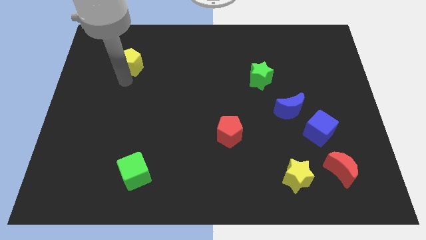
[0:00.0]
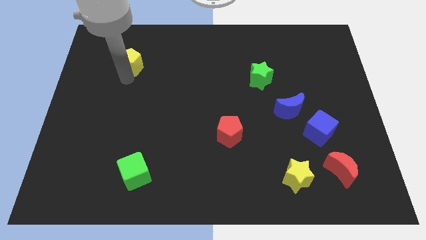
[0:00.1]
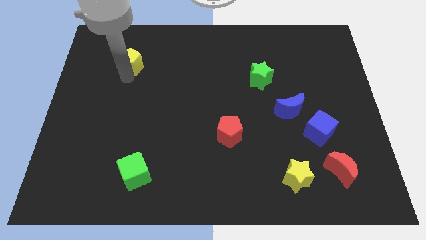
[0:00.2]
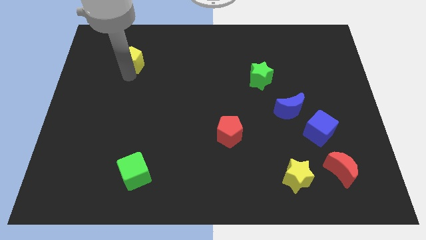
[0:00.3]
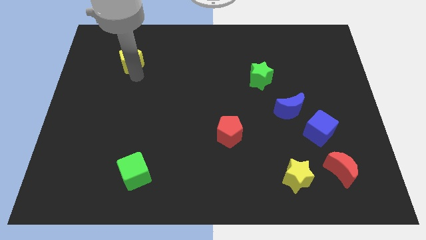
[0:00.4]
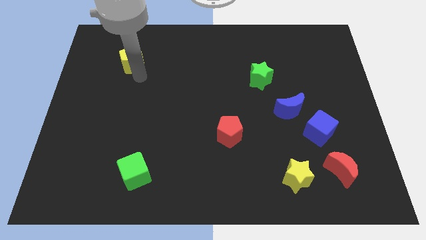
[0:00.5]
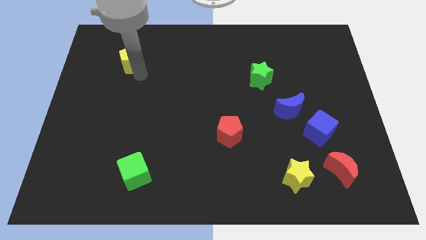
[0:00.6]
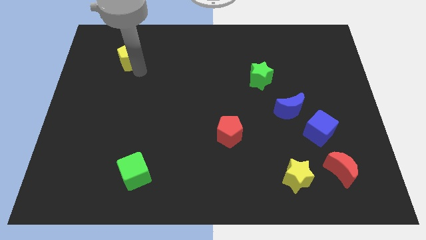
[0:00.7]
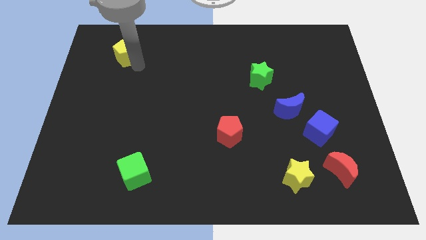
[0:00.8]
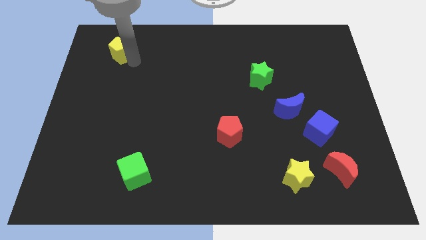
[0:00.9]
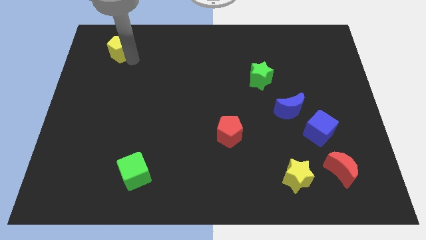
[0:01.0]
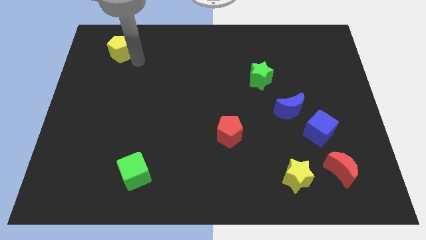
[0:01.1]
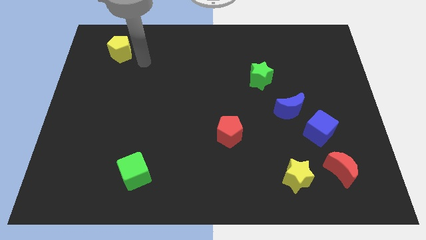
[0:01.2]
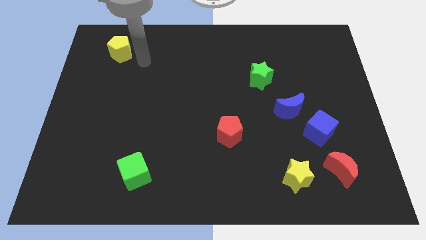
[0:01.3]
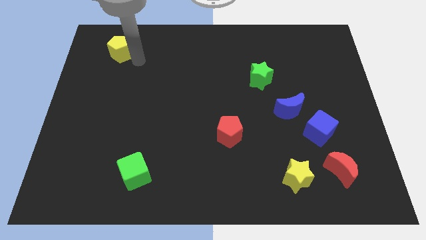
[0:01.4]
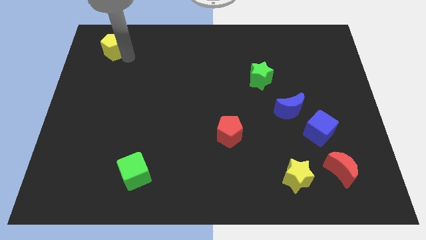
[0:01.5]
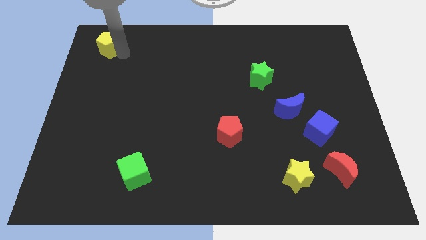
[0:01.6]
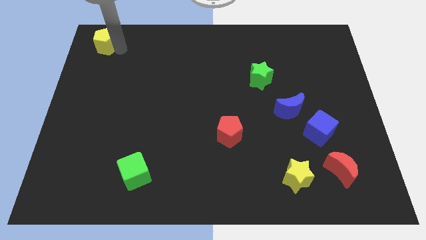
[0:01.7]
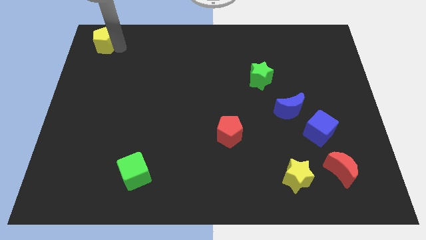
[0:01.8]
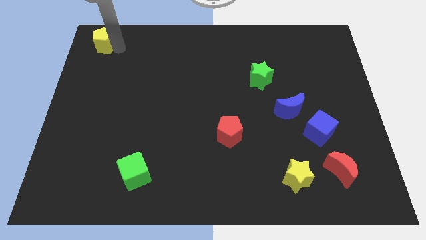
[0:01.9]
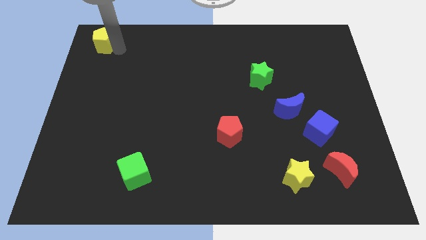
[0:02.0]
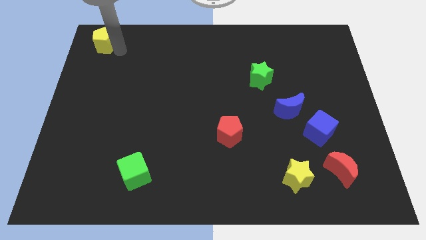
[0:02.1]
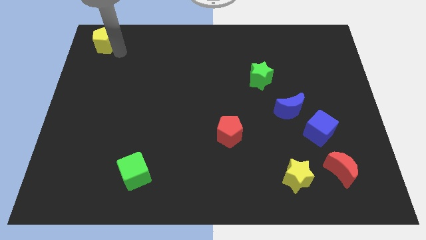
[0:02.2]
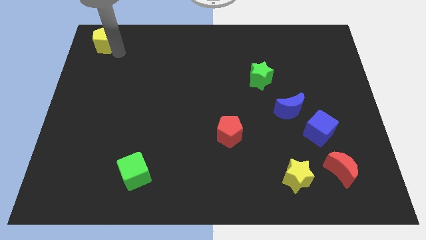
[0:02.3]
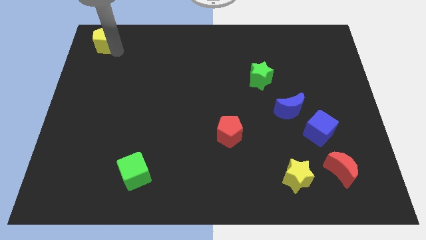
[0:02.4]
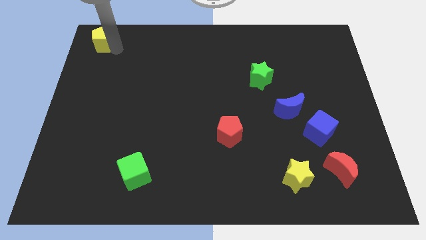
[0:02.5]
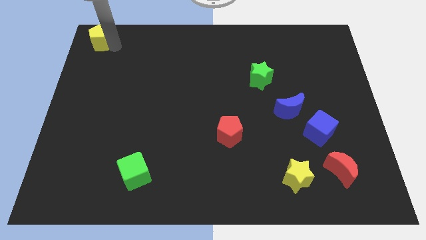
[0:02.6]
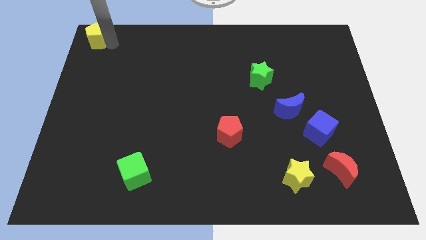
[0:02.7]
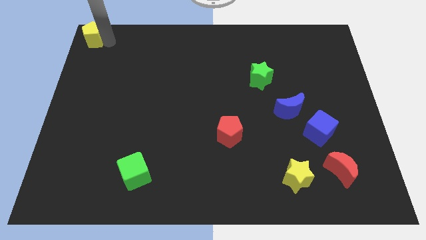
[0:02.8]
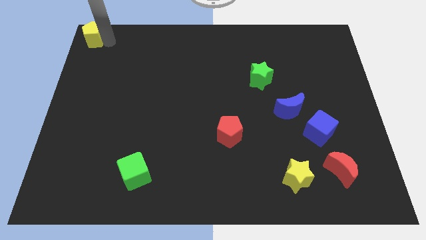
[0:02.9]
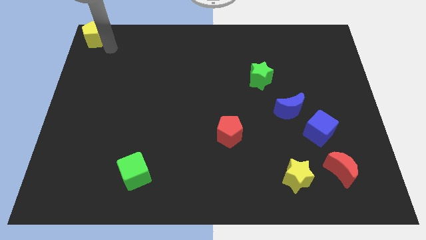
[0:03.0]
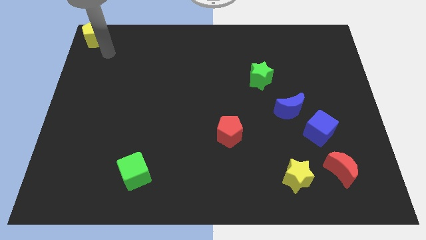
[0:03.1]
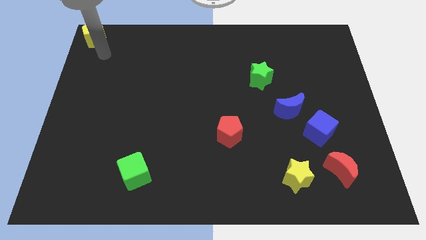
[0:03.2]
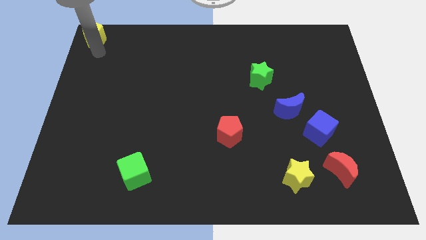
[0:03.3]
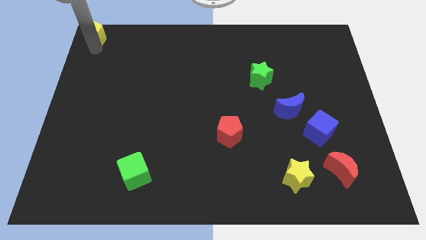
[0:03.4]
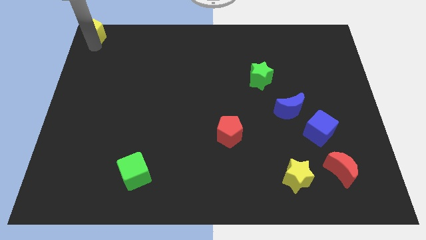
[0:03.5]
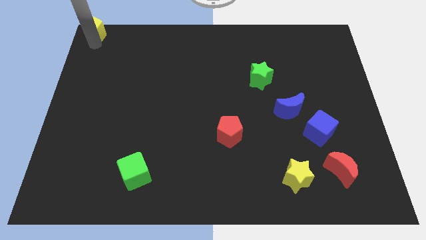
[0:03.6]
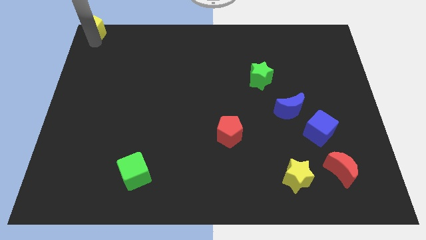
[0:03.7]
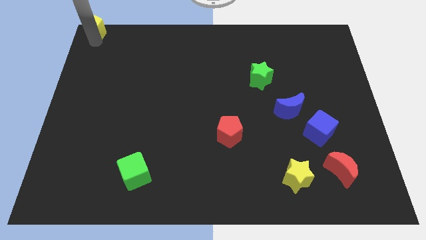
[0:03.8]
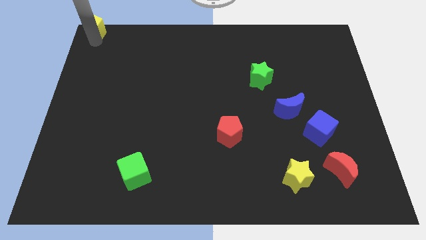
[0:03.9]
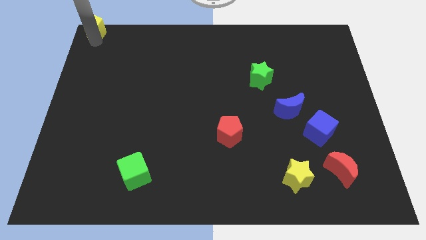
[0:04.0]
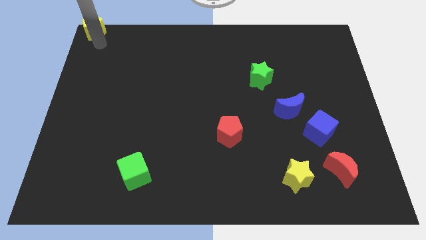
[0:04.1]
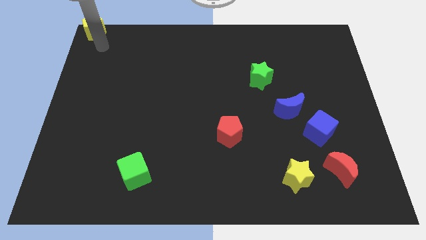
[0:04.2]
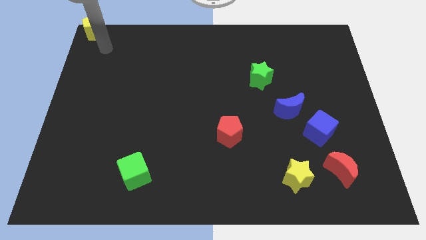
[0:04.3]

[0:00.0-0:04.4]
move the yellow pentagon to the top left of the board

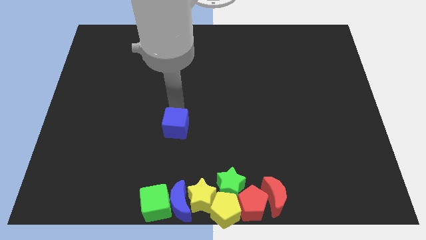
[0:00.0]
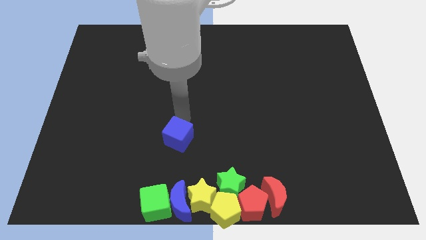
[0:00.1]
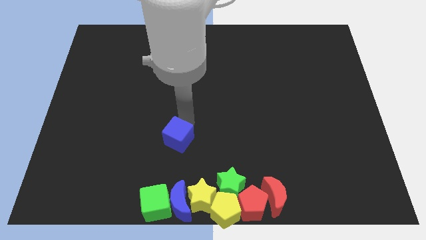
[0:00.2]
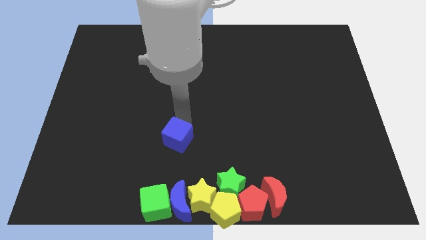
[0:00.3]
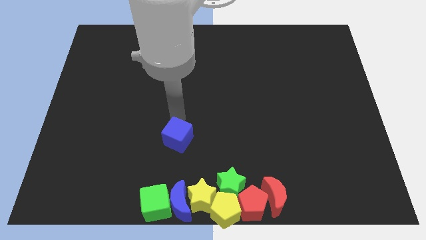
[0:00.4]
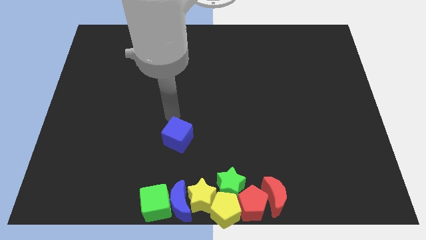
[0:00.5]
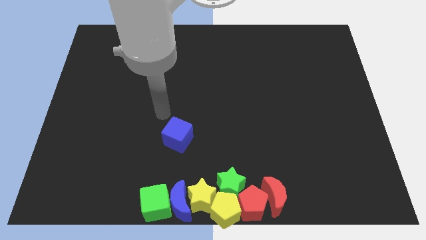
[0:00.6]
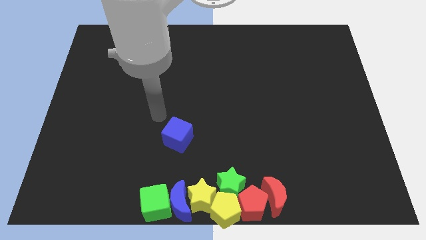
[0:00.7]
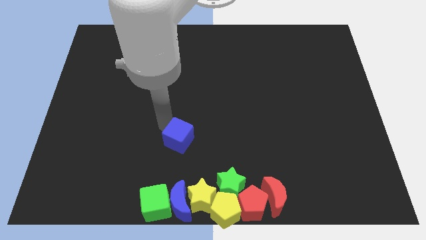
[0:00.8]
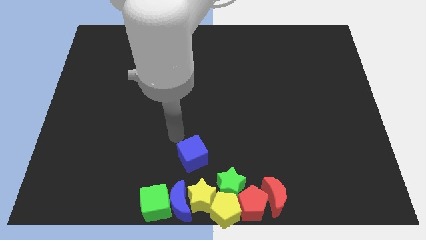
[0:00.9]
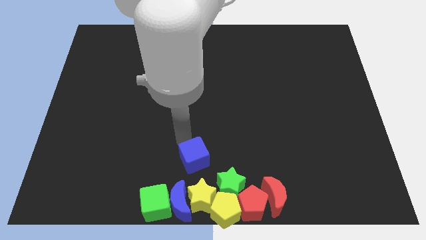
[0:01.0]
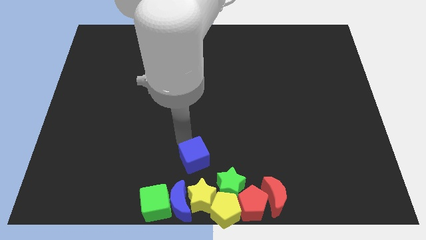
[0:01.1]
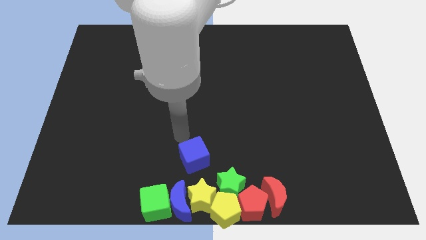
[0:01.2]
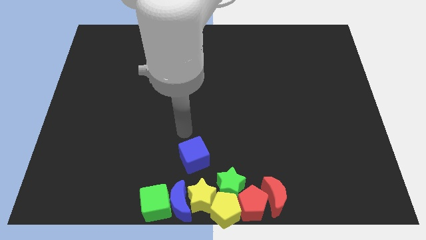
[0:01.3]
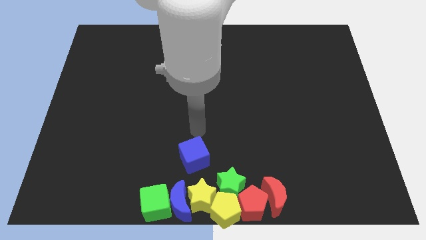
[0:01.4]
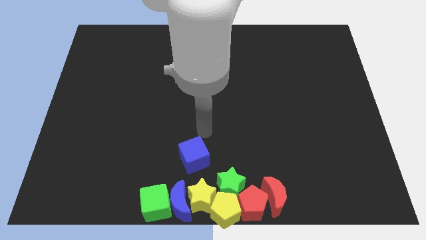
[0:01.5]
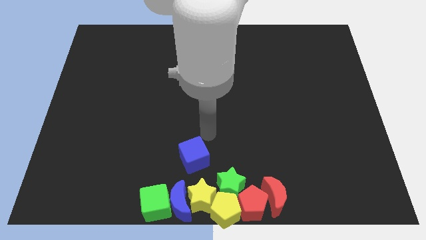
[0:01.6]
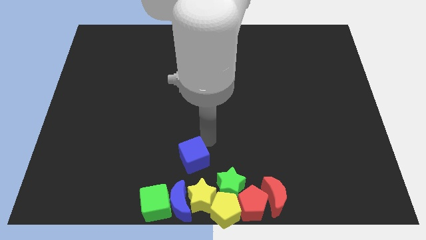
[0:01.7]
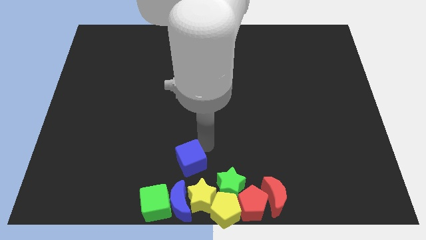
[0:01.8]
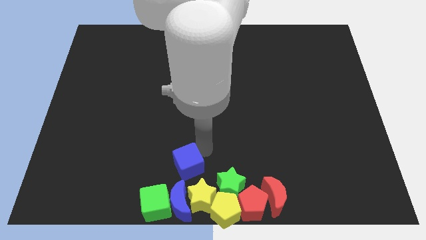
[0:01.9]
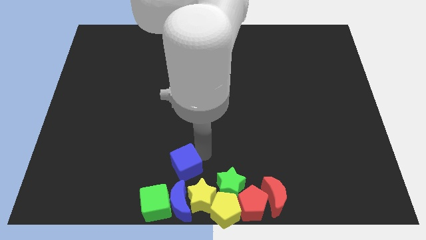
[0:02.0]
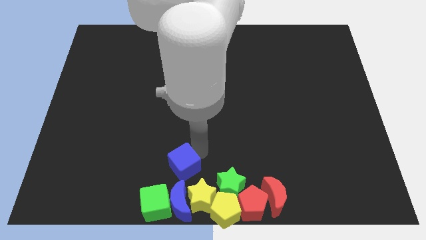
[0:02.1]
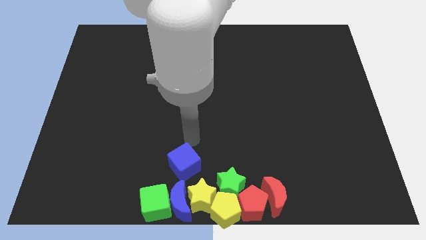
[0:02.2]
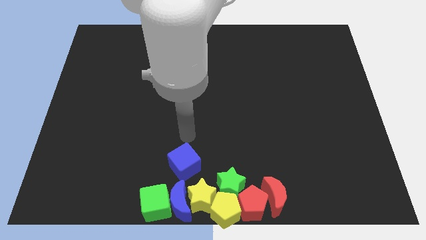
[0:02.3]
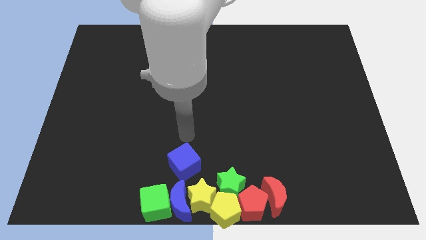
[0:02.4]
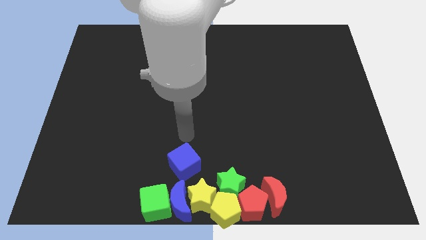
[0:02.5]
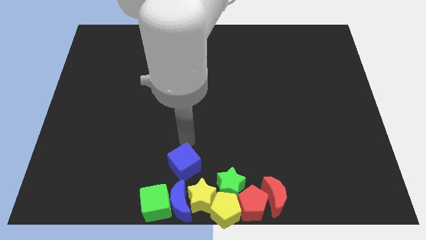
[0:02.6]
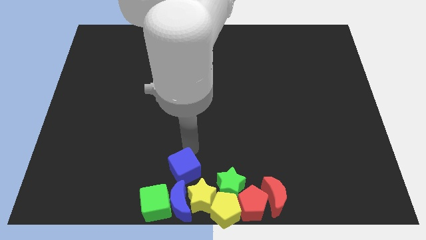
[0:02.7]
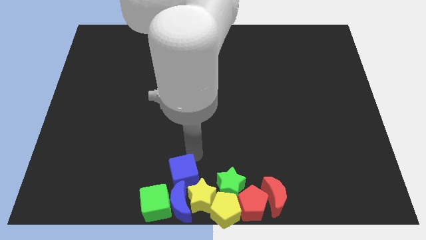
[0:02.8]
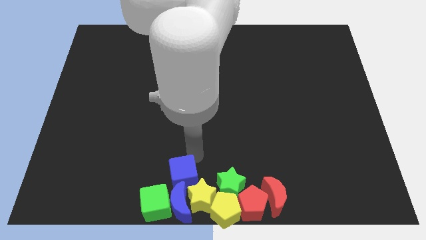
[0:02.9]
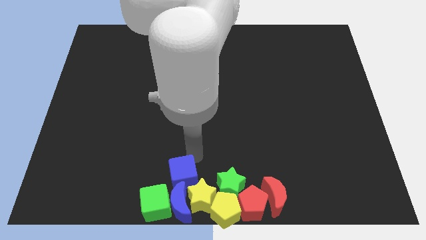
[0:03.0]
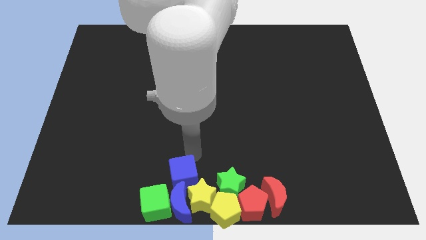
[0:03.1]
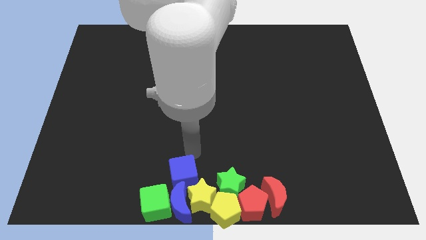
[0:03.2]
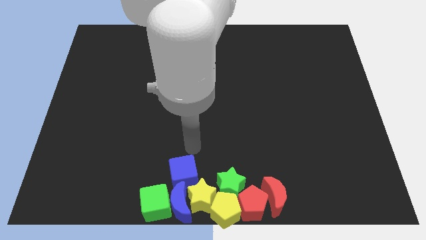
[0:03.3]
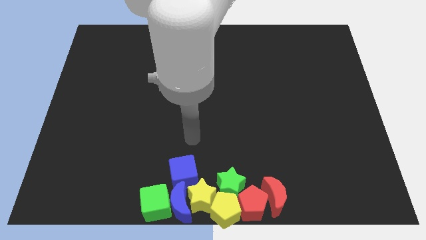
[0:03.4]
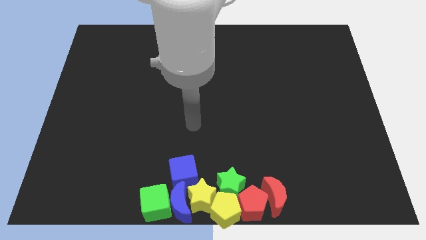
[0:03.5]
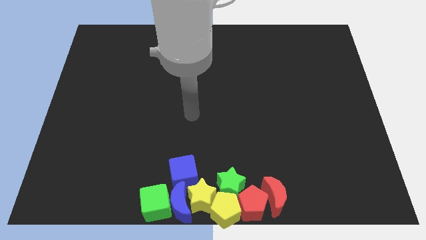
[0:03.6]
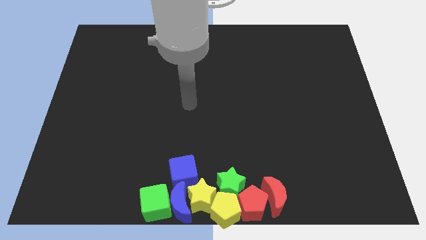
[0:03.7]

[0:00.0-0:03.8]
move the blue cube to the top of blue crescent

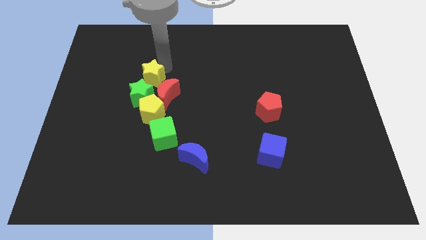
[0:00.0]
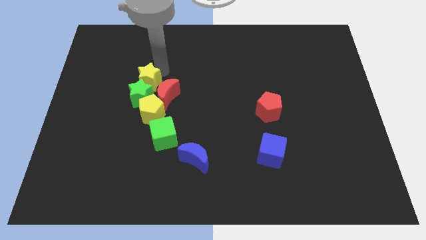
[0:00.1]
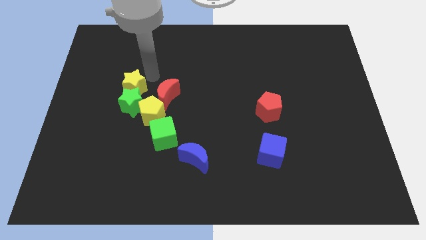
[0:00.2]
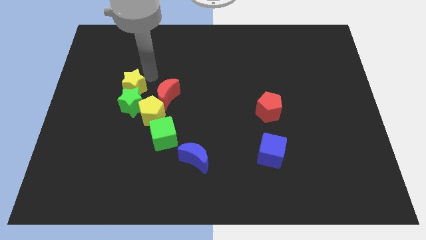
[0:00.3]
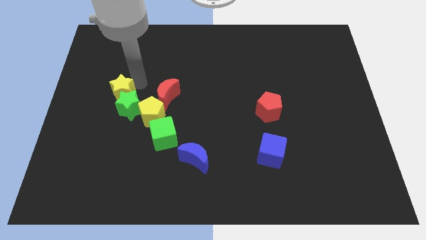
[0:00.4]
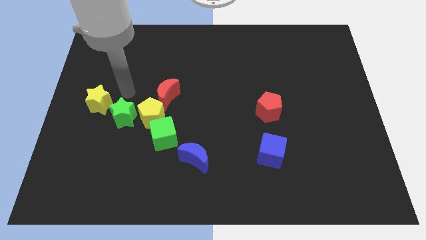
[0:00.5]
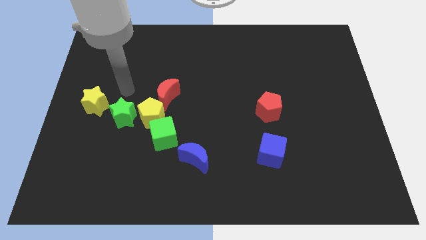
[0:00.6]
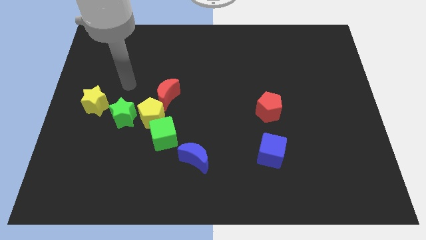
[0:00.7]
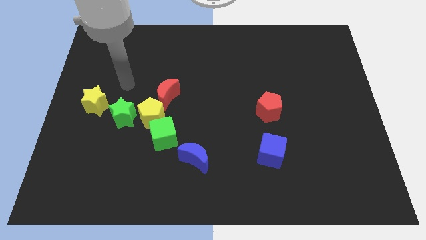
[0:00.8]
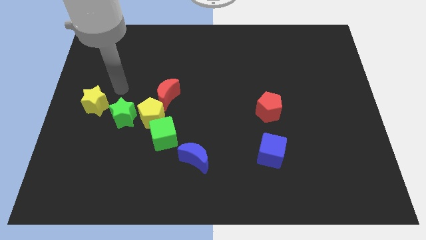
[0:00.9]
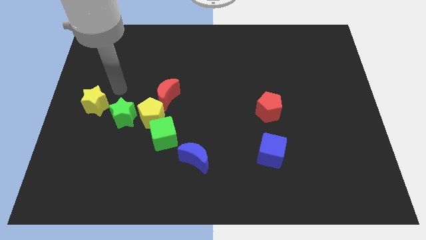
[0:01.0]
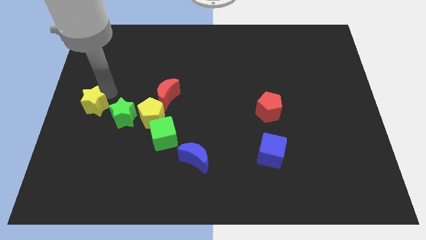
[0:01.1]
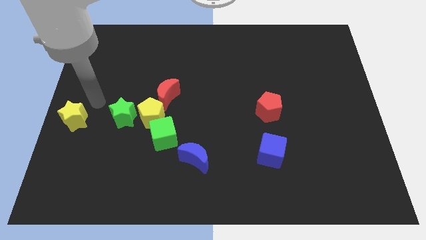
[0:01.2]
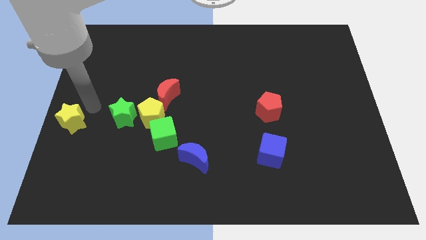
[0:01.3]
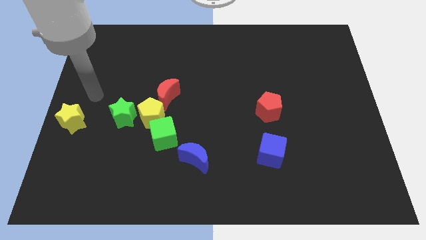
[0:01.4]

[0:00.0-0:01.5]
place the yellow star to the left center of the board
